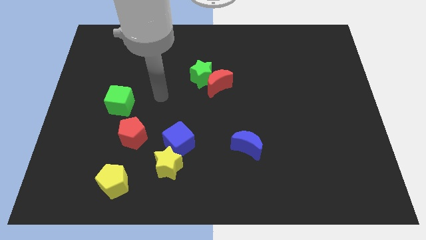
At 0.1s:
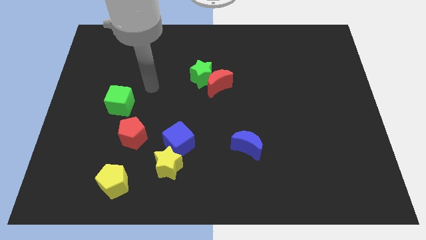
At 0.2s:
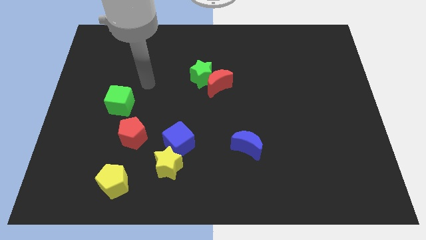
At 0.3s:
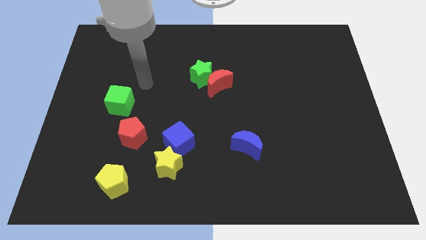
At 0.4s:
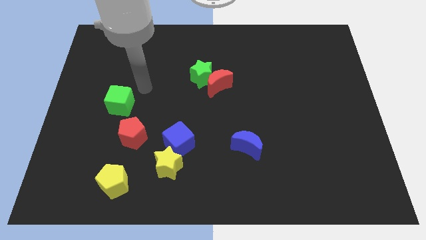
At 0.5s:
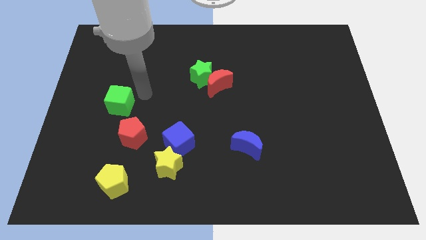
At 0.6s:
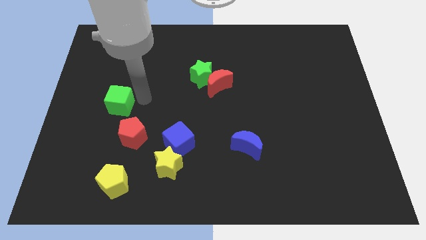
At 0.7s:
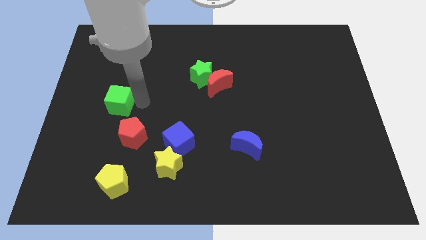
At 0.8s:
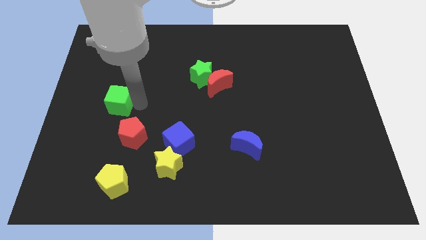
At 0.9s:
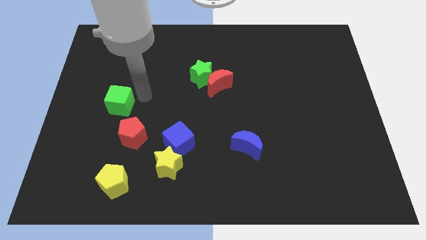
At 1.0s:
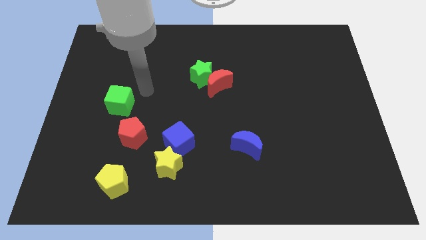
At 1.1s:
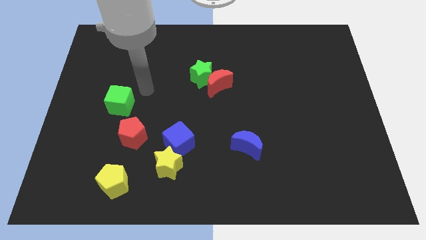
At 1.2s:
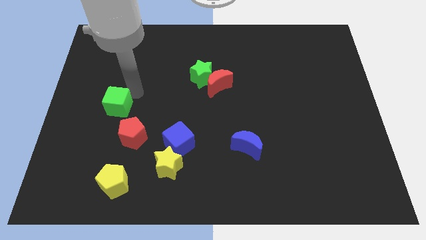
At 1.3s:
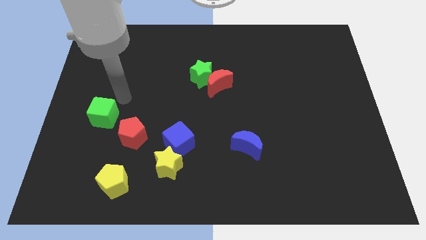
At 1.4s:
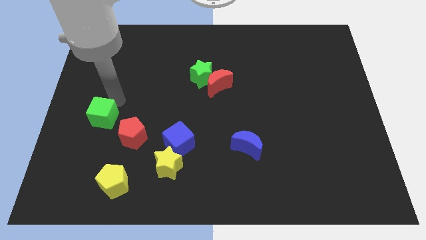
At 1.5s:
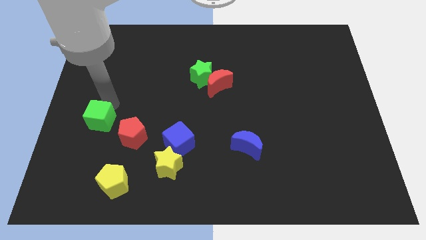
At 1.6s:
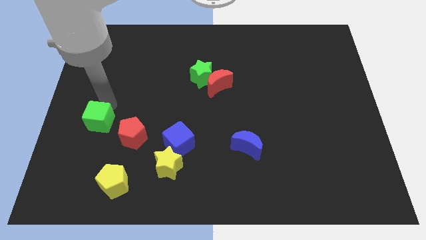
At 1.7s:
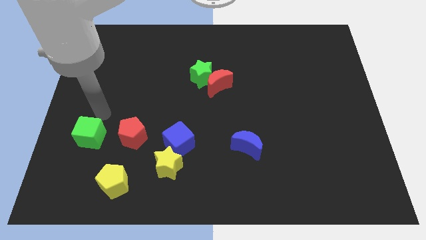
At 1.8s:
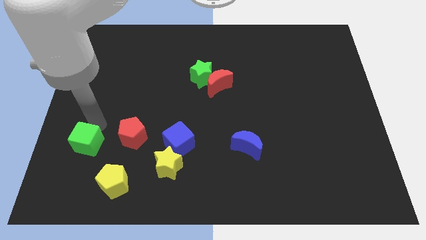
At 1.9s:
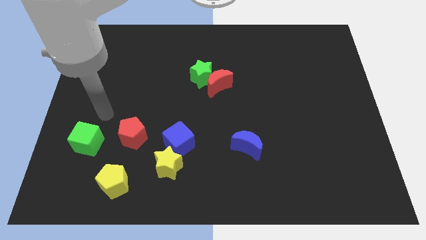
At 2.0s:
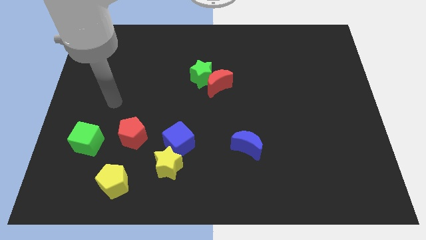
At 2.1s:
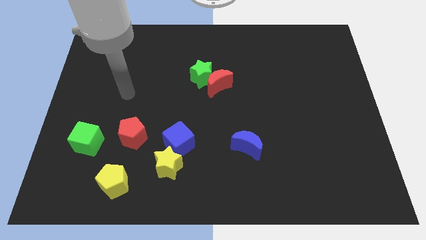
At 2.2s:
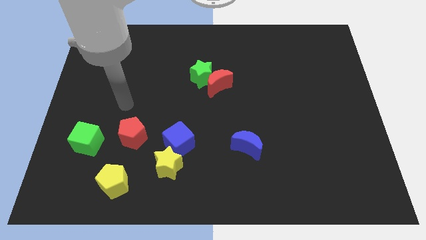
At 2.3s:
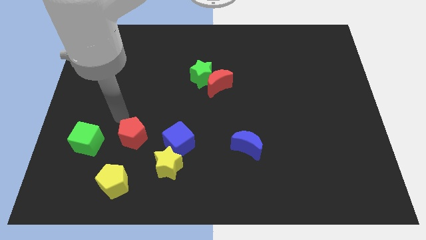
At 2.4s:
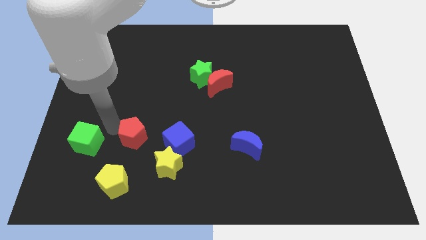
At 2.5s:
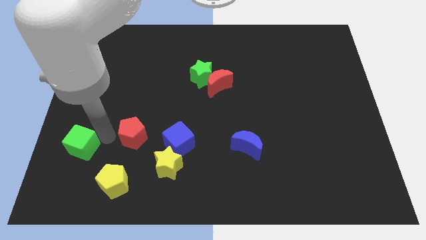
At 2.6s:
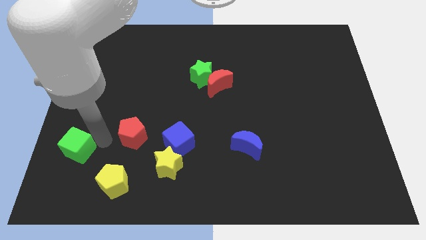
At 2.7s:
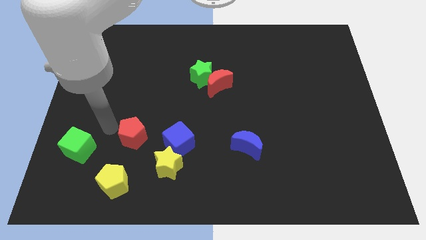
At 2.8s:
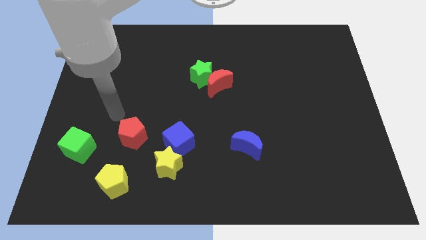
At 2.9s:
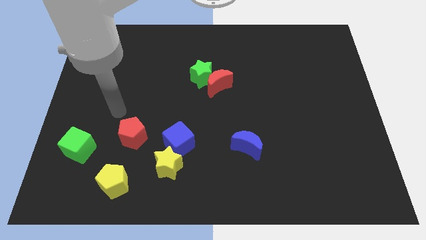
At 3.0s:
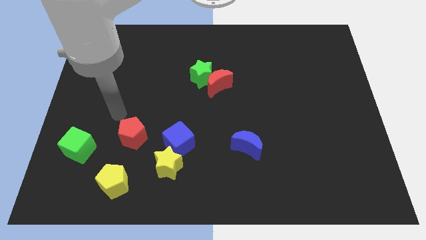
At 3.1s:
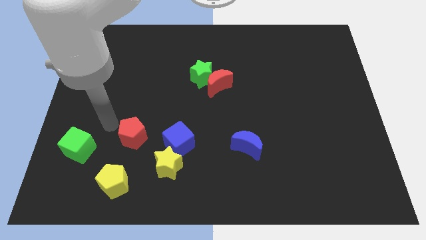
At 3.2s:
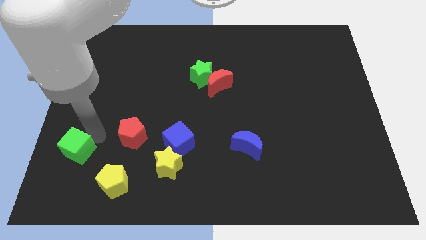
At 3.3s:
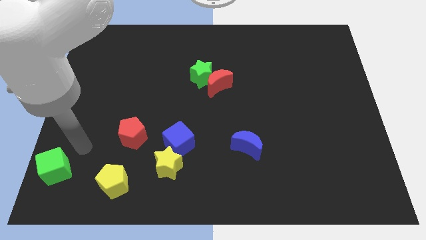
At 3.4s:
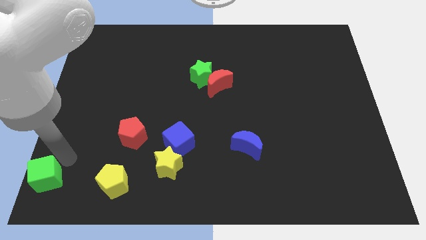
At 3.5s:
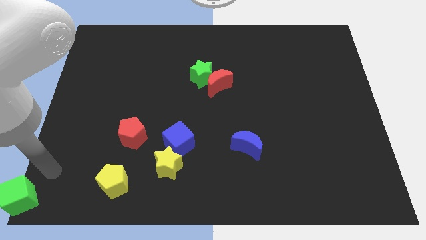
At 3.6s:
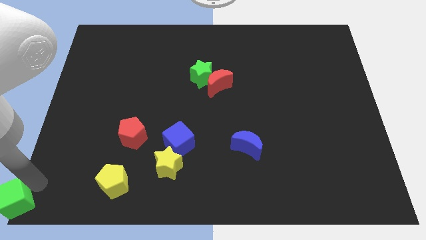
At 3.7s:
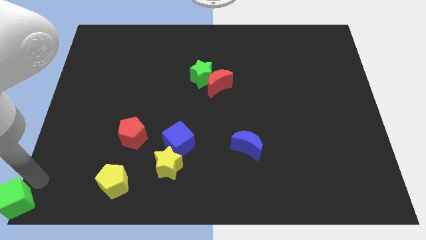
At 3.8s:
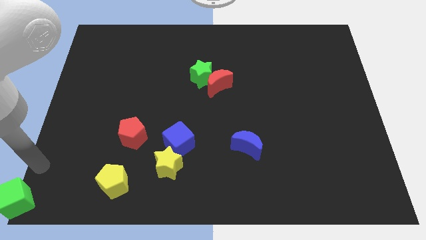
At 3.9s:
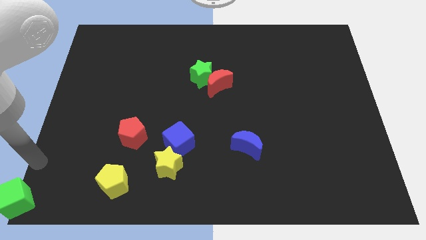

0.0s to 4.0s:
move the green cube to the bottom left corner

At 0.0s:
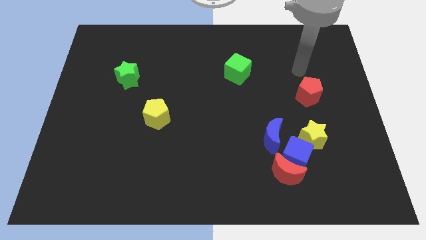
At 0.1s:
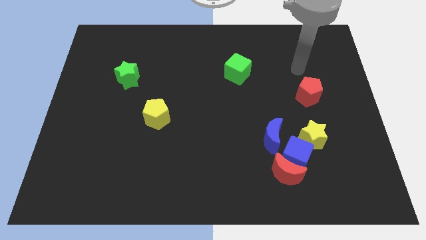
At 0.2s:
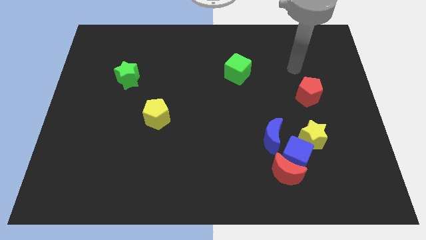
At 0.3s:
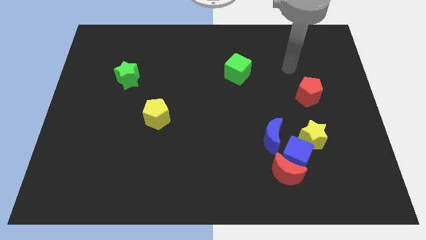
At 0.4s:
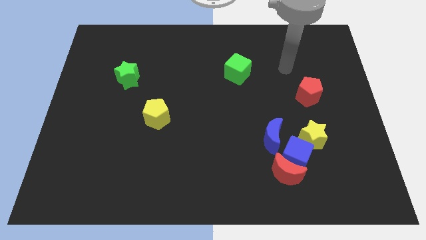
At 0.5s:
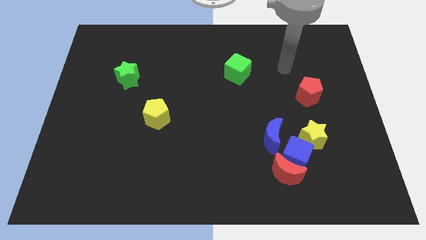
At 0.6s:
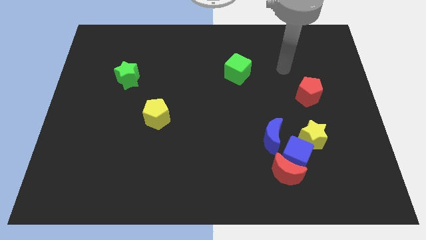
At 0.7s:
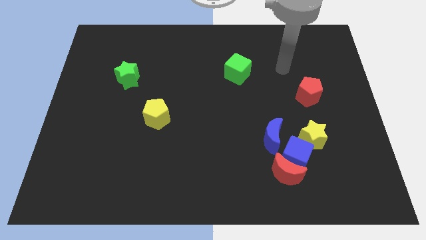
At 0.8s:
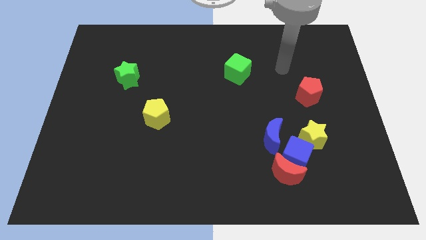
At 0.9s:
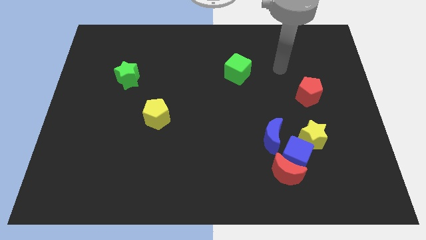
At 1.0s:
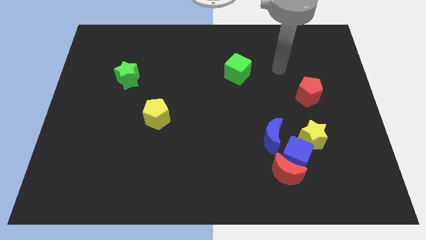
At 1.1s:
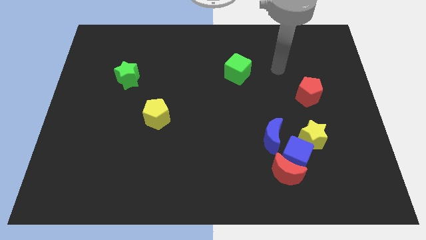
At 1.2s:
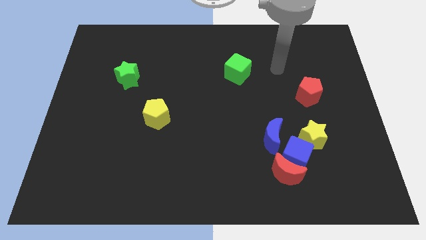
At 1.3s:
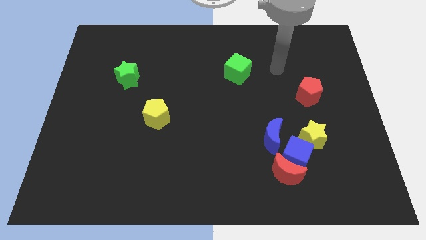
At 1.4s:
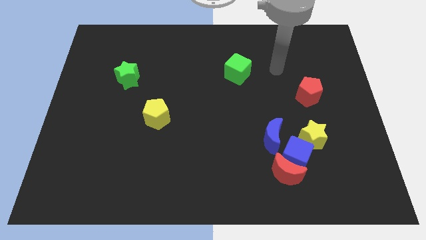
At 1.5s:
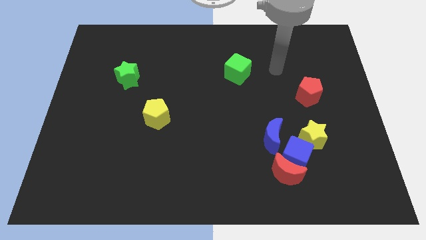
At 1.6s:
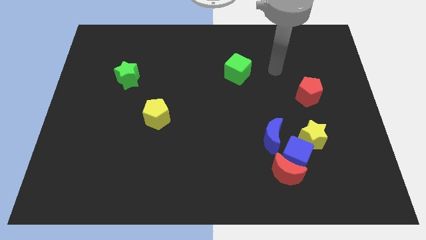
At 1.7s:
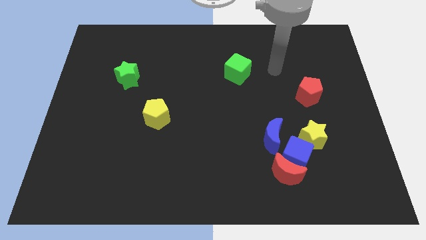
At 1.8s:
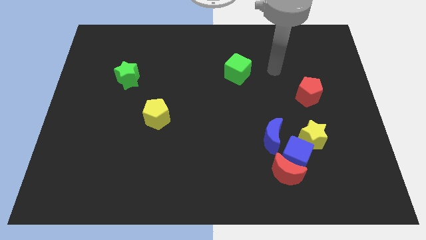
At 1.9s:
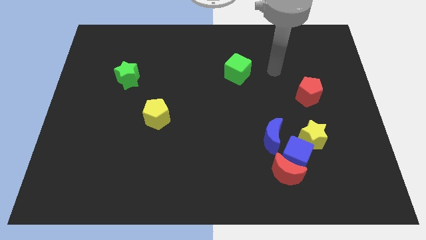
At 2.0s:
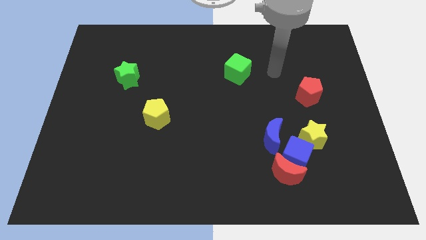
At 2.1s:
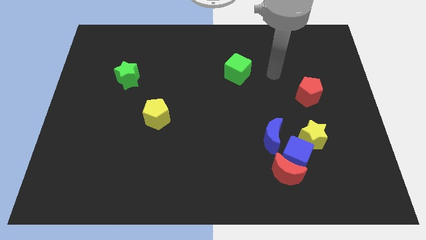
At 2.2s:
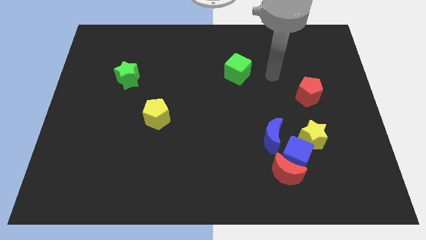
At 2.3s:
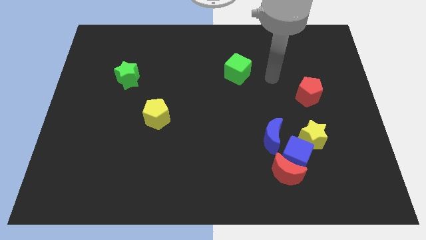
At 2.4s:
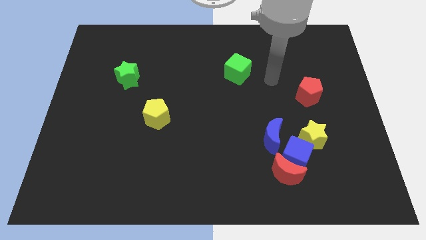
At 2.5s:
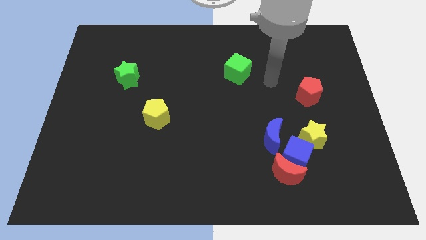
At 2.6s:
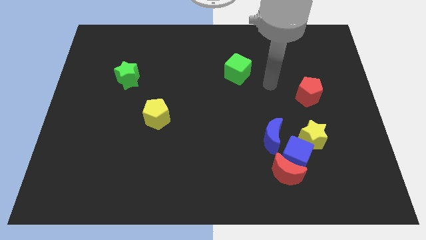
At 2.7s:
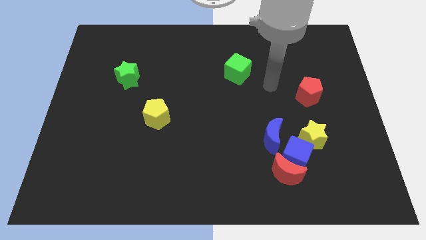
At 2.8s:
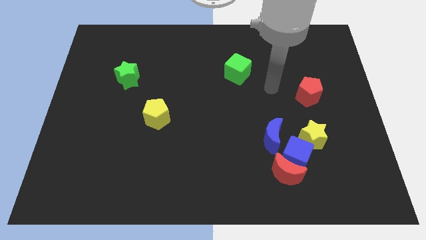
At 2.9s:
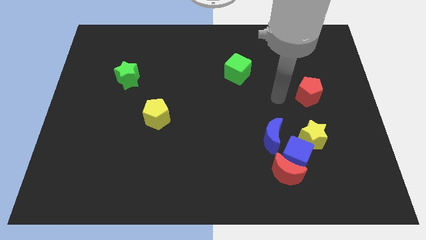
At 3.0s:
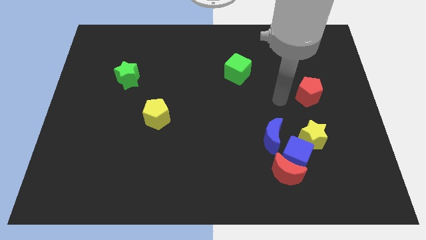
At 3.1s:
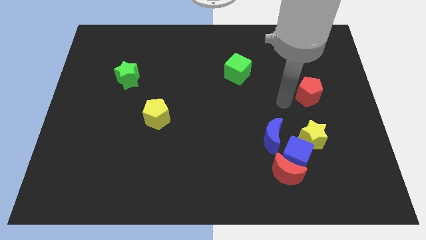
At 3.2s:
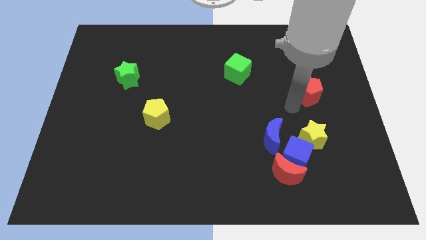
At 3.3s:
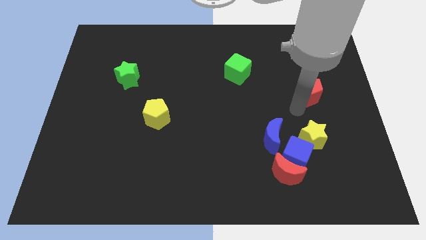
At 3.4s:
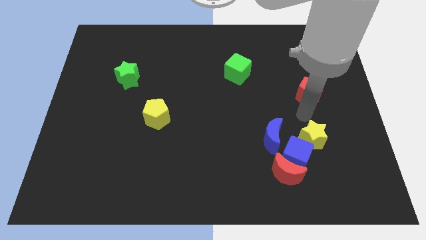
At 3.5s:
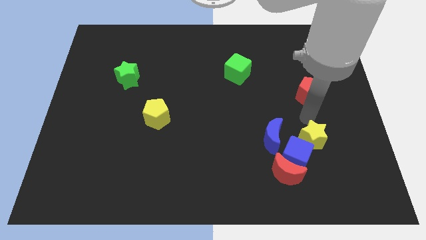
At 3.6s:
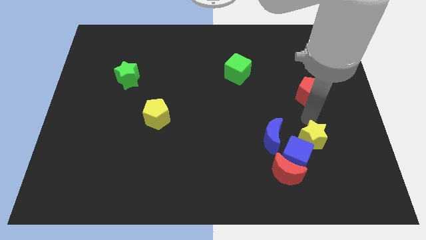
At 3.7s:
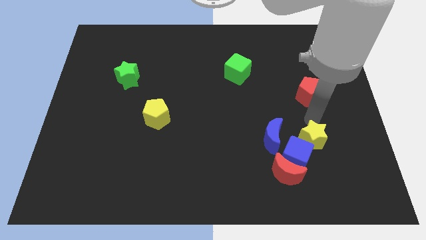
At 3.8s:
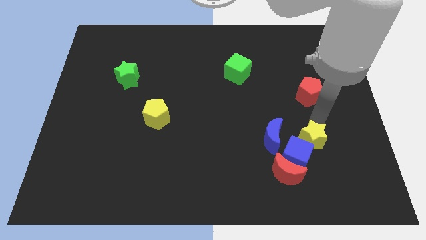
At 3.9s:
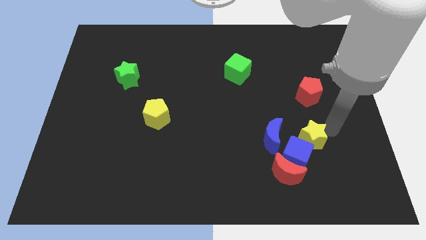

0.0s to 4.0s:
place your arm above the yellow star

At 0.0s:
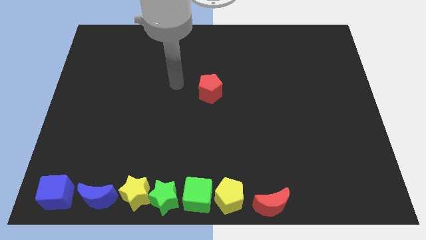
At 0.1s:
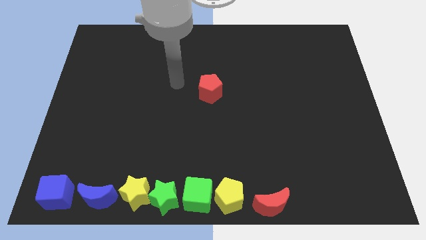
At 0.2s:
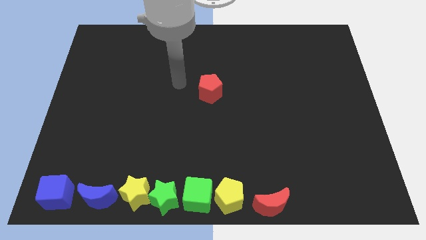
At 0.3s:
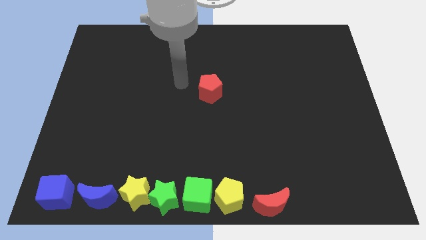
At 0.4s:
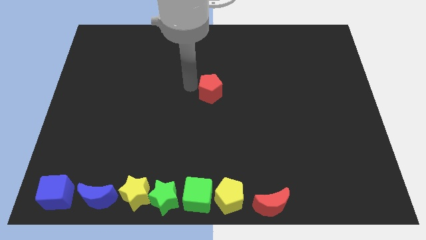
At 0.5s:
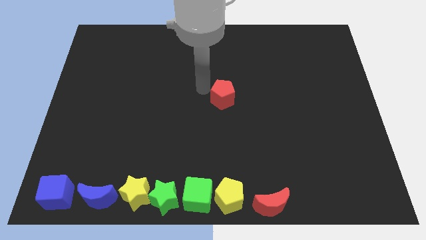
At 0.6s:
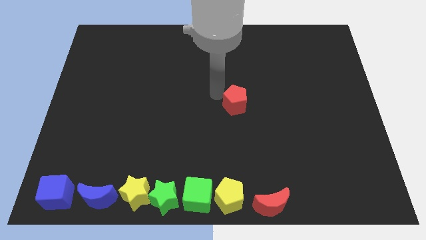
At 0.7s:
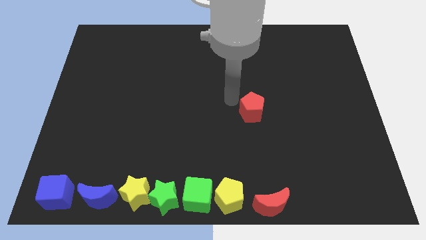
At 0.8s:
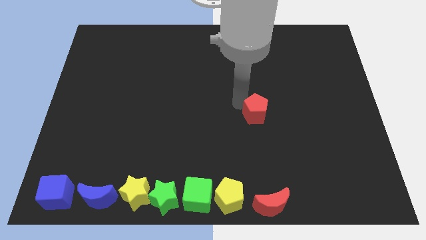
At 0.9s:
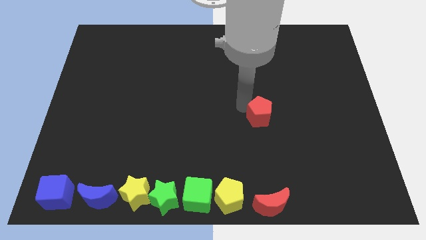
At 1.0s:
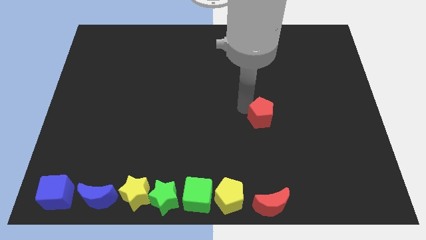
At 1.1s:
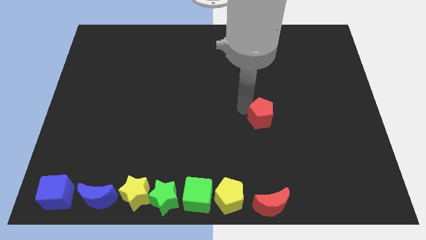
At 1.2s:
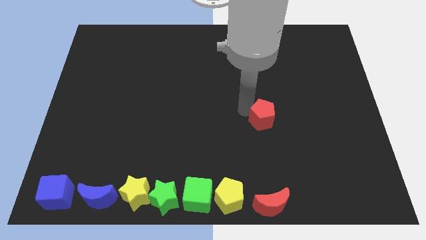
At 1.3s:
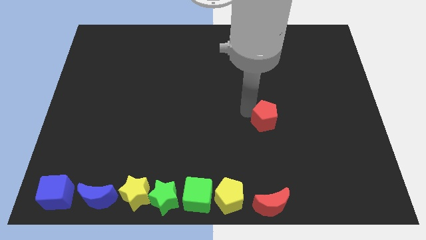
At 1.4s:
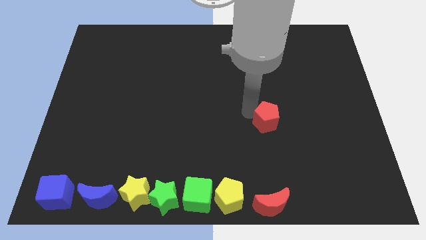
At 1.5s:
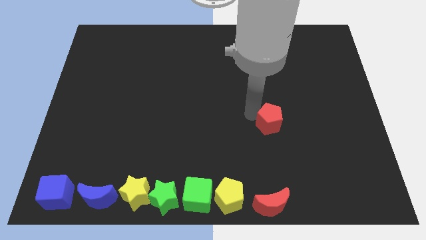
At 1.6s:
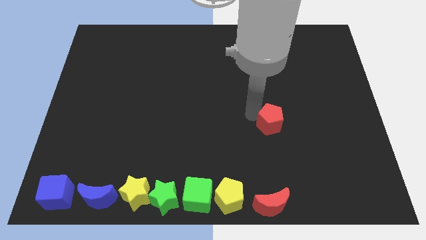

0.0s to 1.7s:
slide red pentagon above red moon
